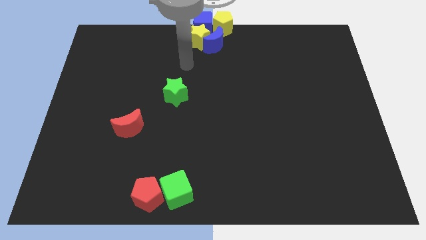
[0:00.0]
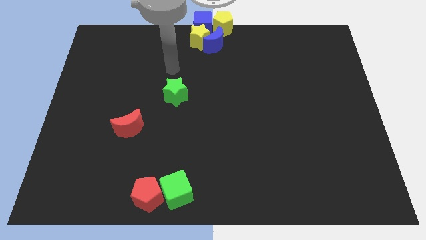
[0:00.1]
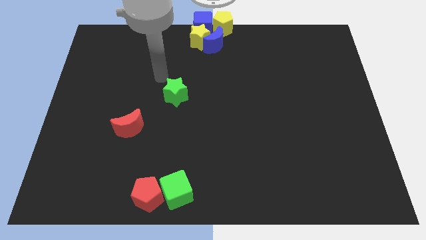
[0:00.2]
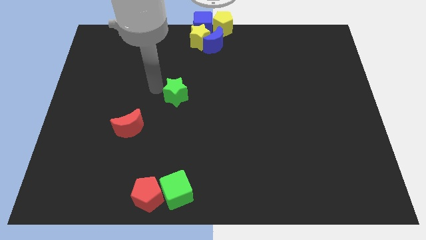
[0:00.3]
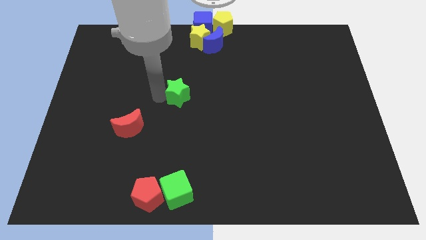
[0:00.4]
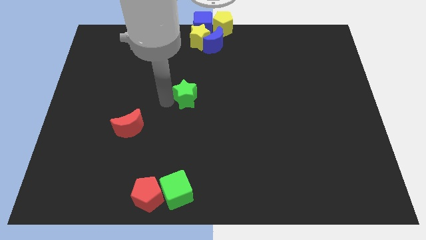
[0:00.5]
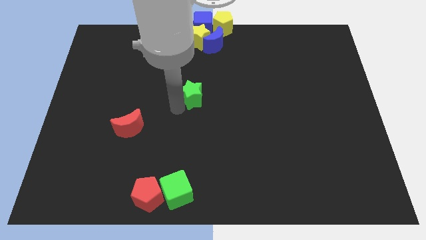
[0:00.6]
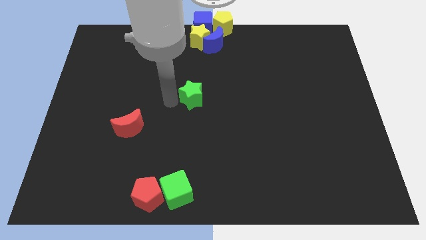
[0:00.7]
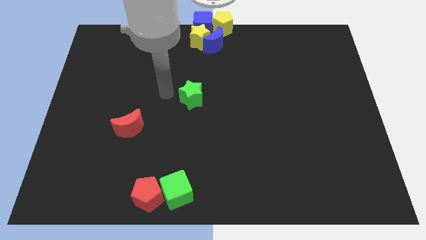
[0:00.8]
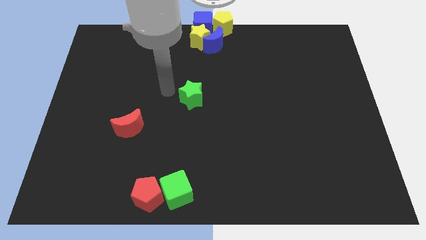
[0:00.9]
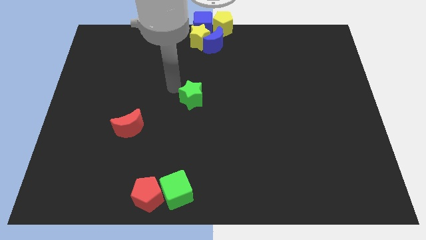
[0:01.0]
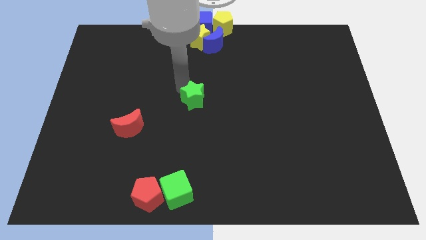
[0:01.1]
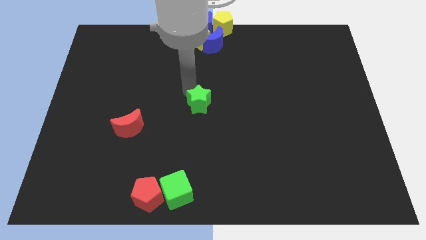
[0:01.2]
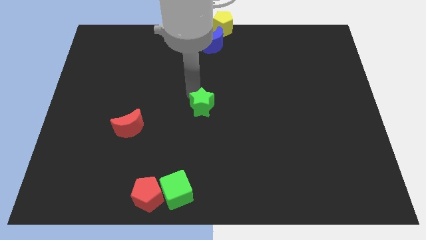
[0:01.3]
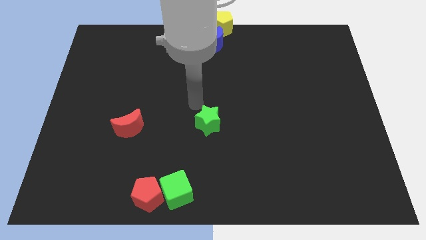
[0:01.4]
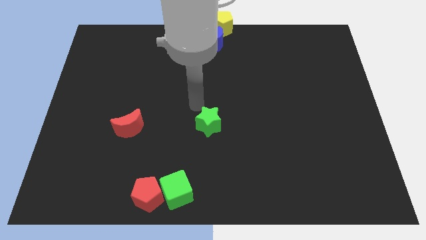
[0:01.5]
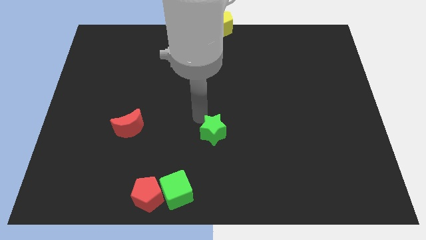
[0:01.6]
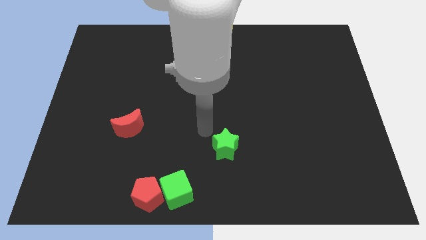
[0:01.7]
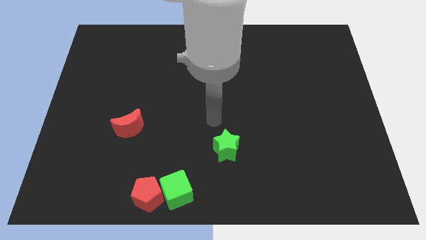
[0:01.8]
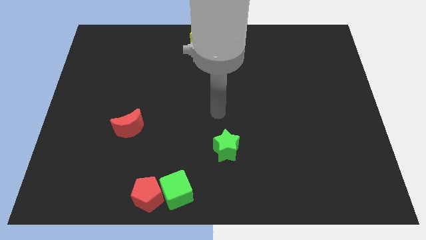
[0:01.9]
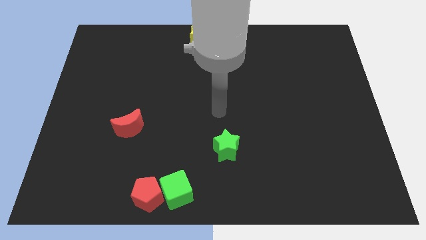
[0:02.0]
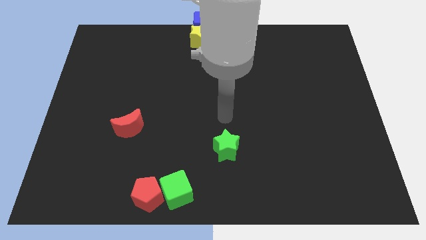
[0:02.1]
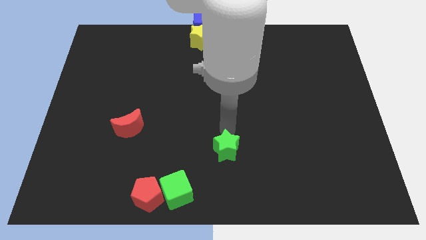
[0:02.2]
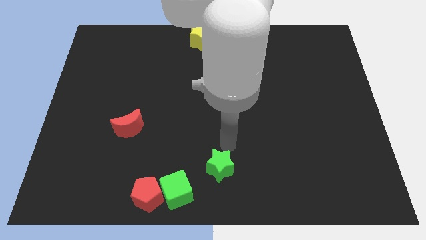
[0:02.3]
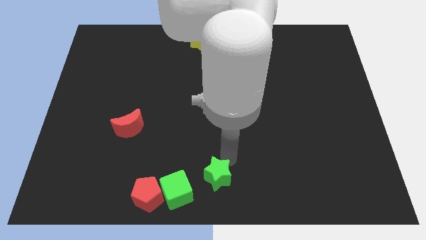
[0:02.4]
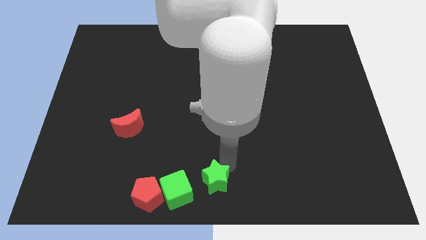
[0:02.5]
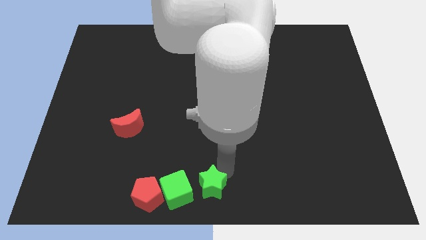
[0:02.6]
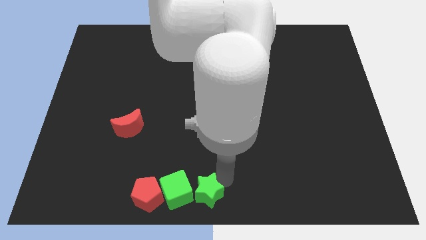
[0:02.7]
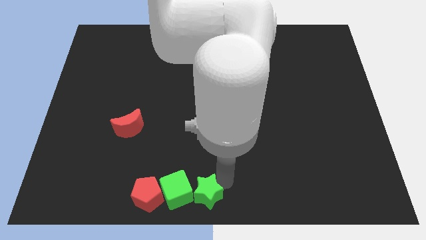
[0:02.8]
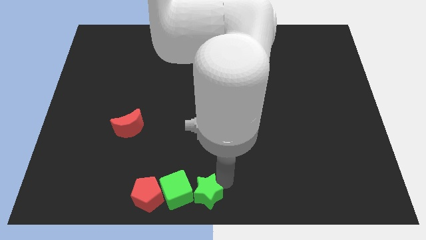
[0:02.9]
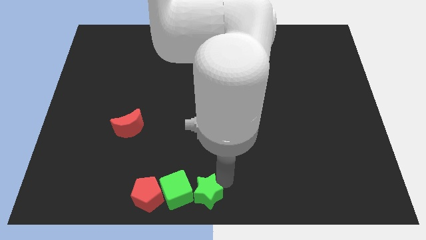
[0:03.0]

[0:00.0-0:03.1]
place the green star right to the green cube

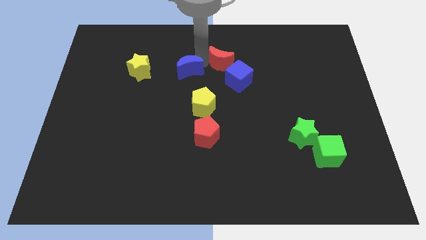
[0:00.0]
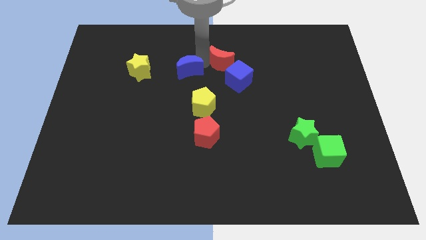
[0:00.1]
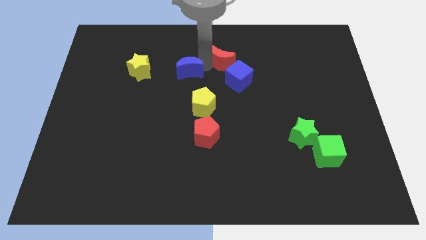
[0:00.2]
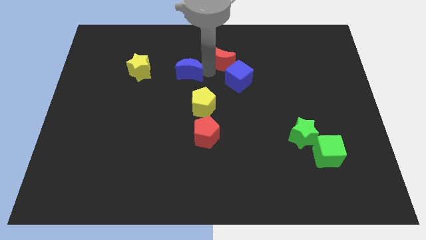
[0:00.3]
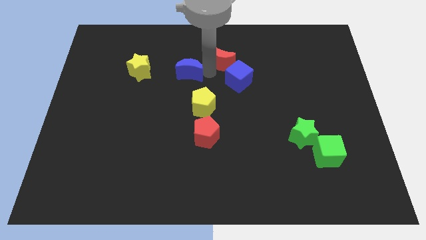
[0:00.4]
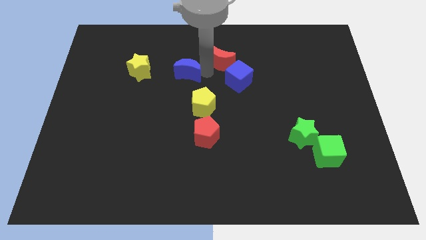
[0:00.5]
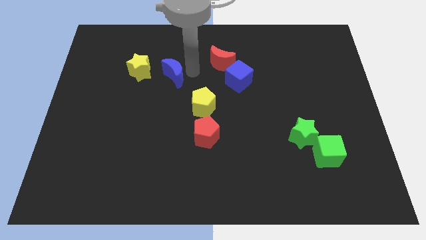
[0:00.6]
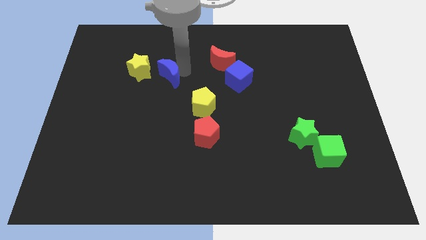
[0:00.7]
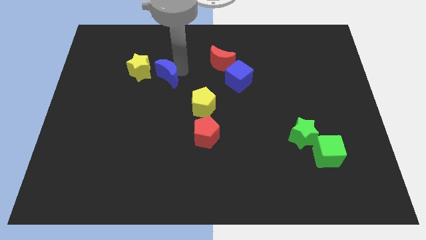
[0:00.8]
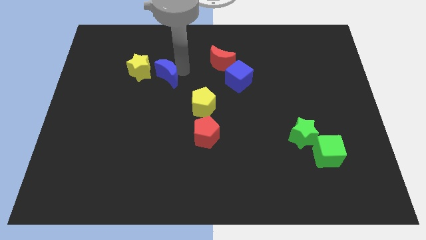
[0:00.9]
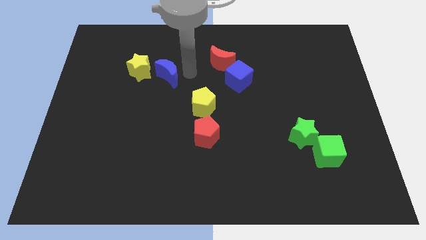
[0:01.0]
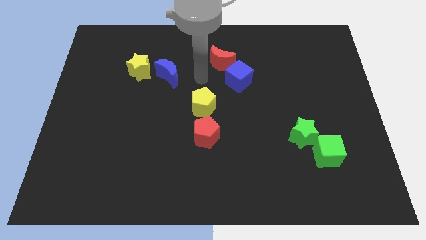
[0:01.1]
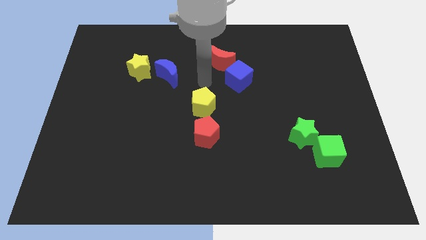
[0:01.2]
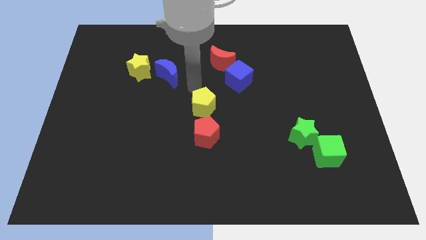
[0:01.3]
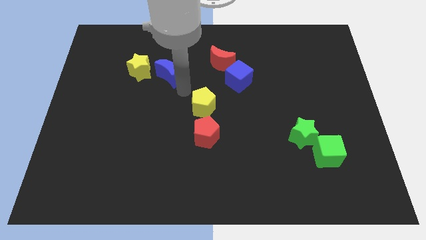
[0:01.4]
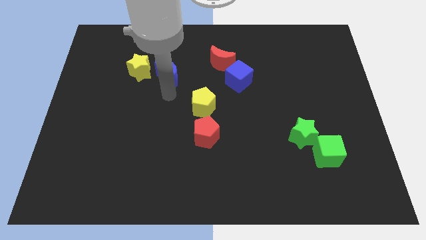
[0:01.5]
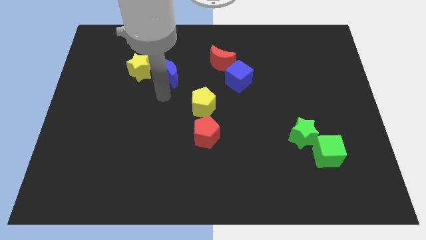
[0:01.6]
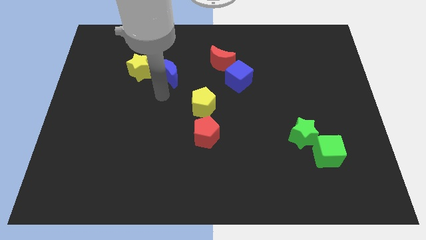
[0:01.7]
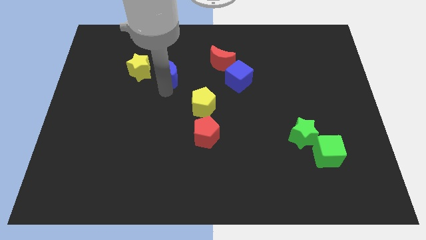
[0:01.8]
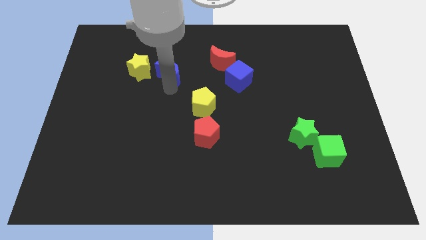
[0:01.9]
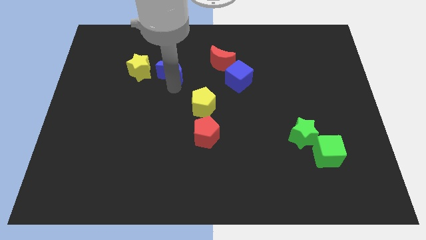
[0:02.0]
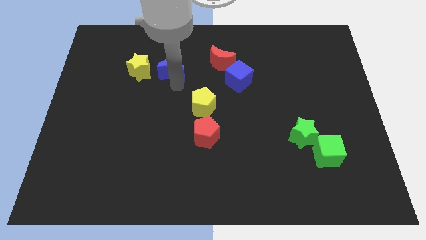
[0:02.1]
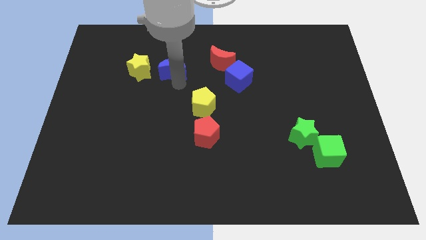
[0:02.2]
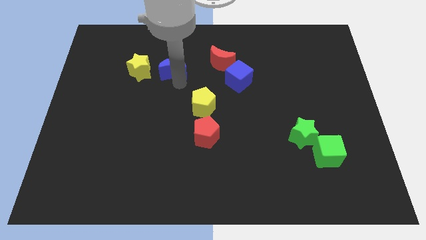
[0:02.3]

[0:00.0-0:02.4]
push the blue crescent to the right of the yellow star

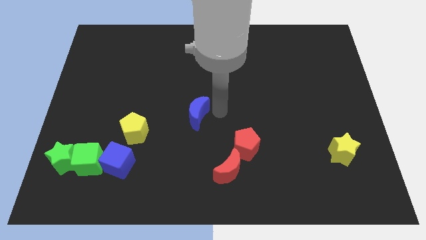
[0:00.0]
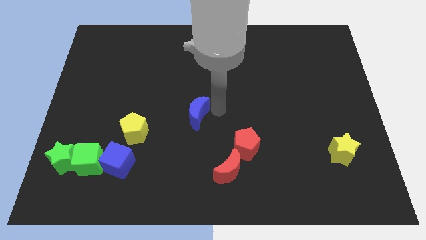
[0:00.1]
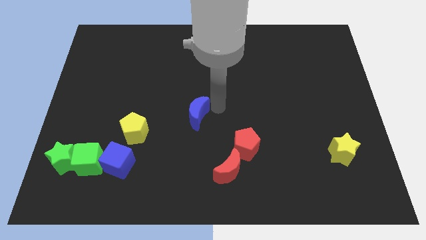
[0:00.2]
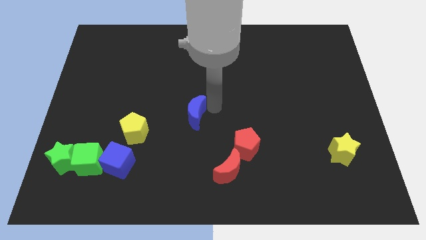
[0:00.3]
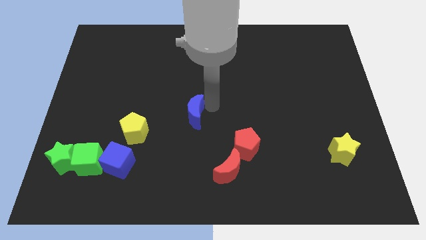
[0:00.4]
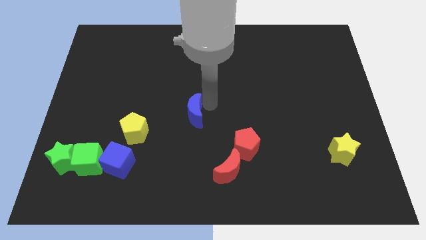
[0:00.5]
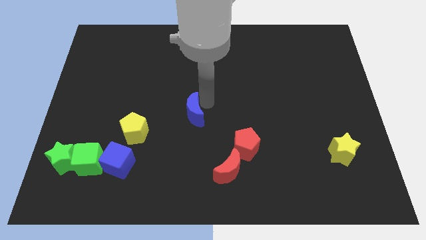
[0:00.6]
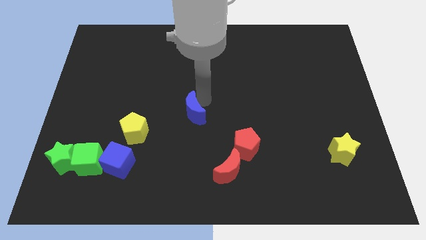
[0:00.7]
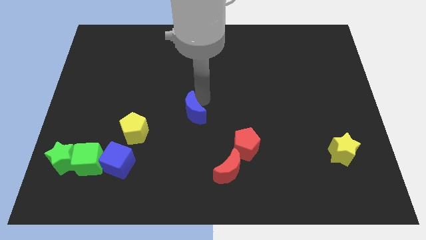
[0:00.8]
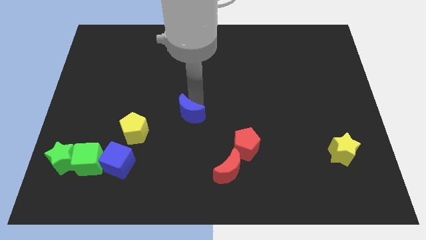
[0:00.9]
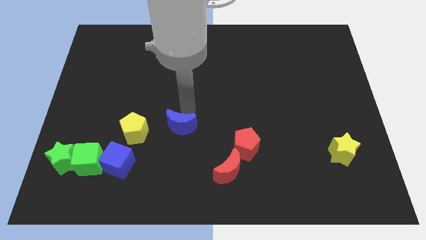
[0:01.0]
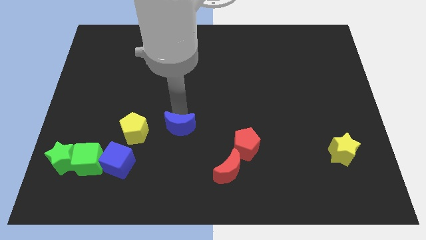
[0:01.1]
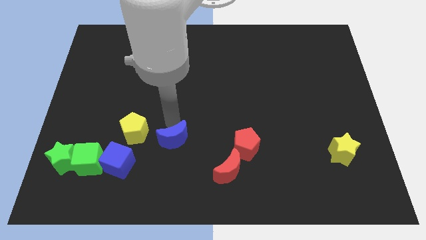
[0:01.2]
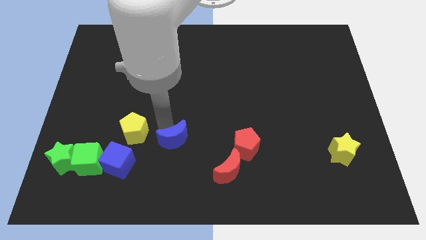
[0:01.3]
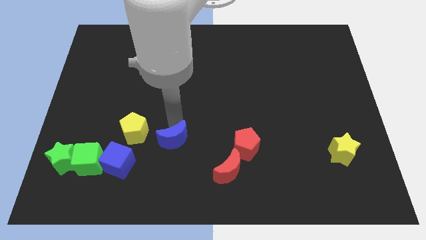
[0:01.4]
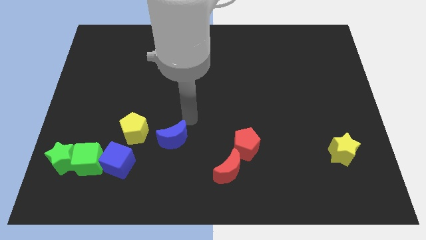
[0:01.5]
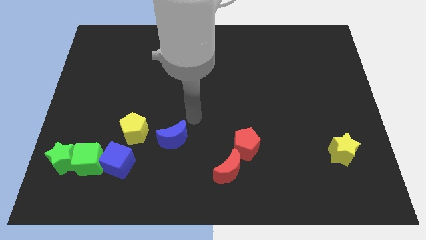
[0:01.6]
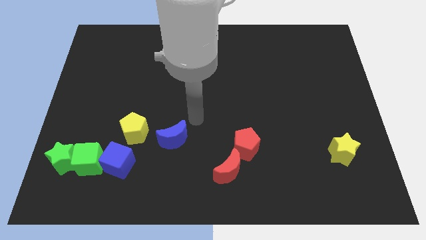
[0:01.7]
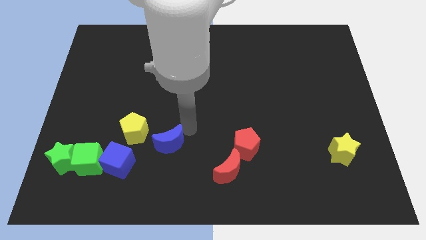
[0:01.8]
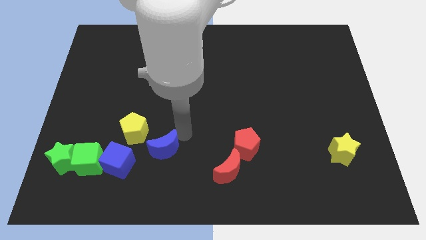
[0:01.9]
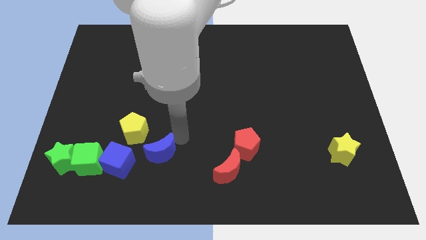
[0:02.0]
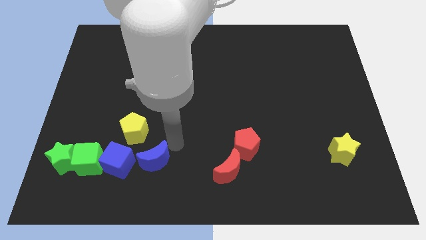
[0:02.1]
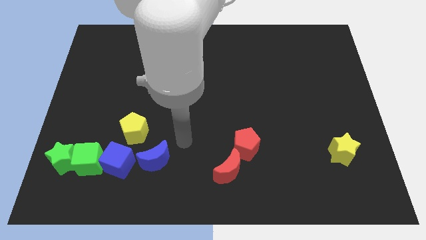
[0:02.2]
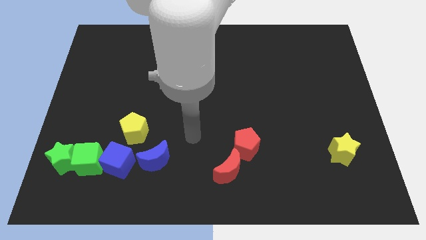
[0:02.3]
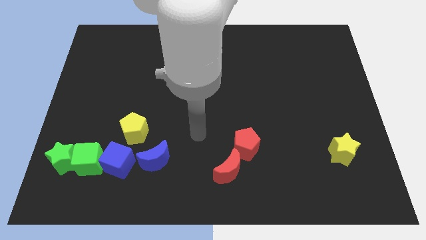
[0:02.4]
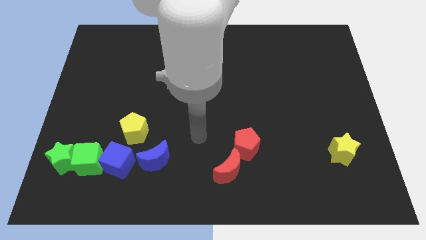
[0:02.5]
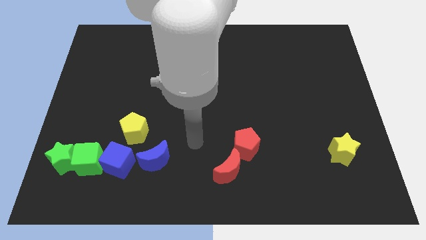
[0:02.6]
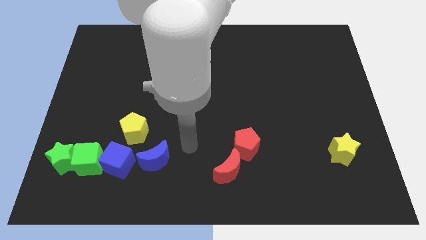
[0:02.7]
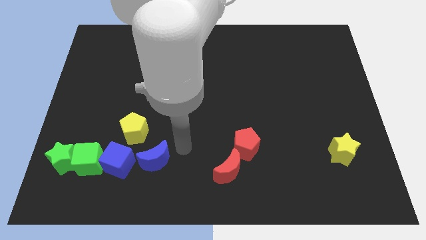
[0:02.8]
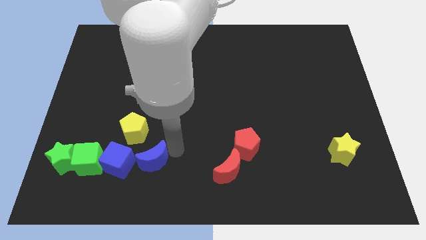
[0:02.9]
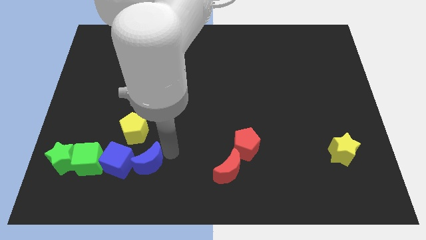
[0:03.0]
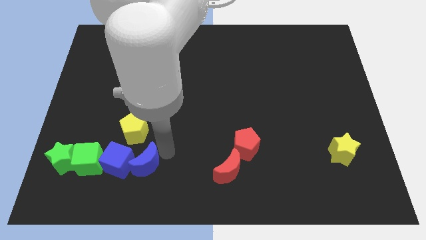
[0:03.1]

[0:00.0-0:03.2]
move the blue moon to the right of blue cube

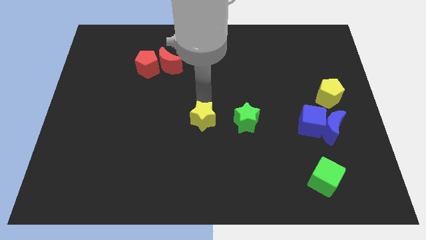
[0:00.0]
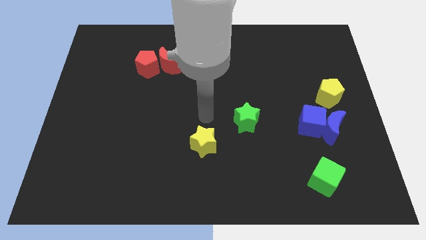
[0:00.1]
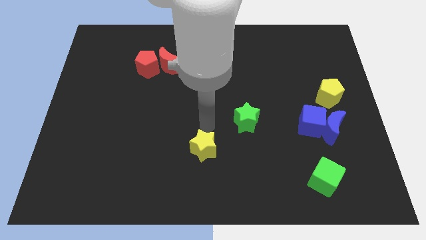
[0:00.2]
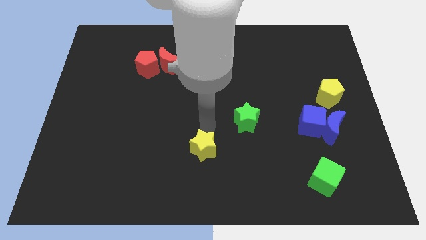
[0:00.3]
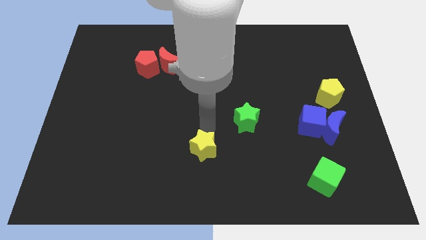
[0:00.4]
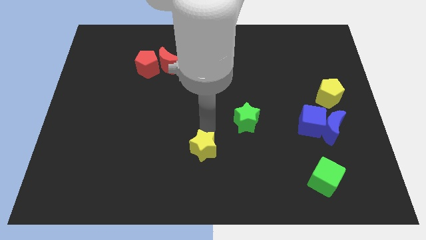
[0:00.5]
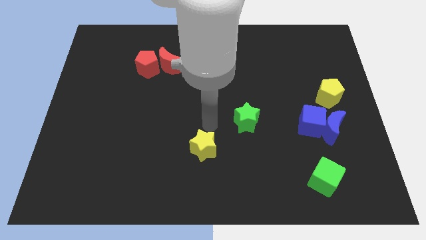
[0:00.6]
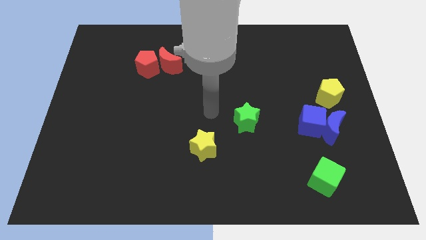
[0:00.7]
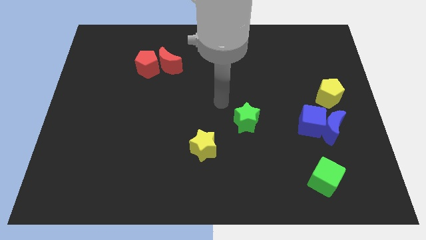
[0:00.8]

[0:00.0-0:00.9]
move the yellow star to bottom of the board
